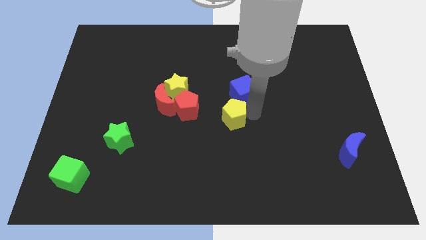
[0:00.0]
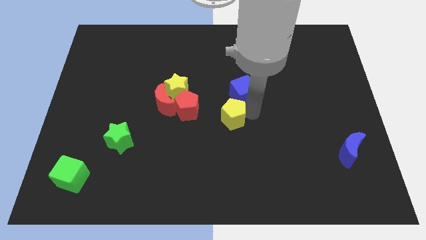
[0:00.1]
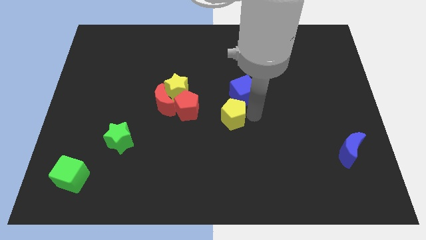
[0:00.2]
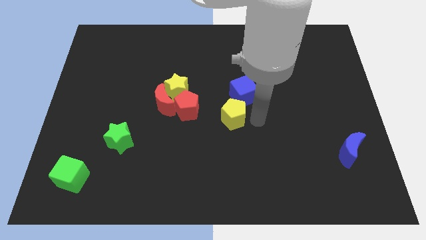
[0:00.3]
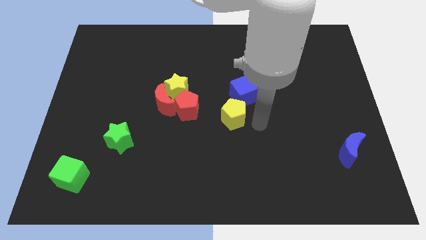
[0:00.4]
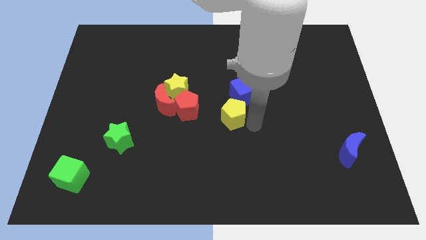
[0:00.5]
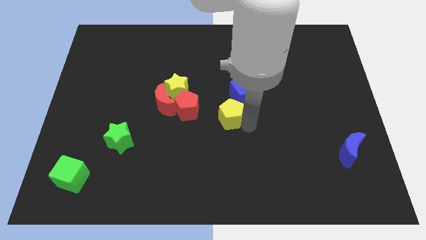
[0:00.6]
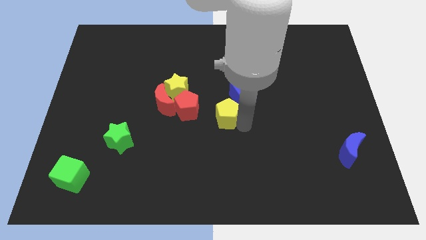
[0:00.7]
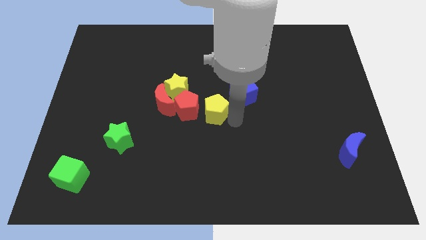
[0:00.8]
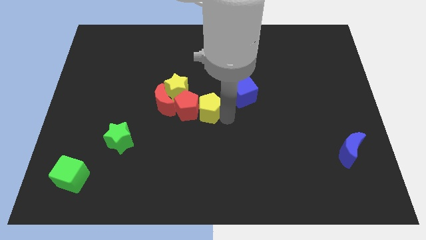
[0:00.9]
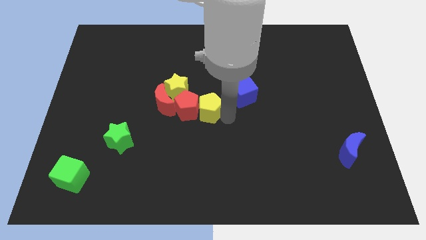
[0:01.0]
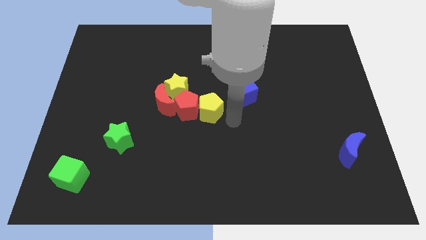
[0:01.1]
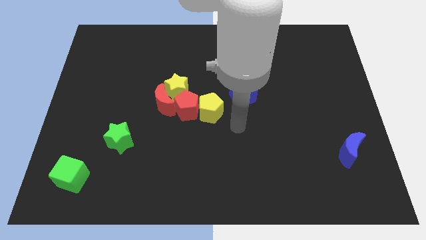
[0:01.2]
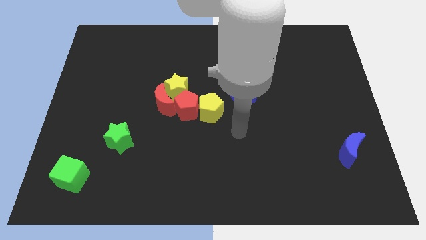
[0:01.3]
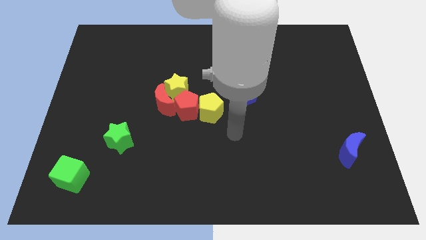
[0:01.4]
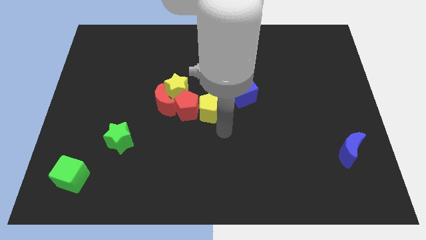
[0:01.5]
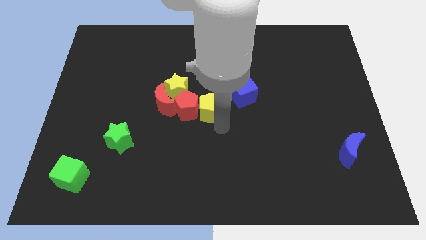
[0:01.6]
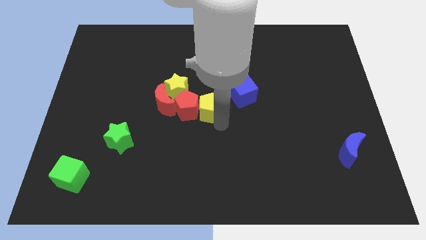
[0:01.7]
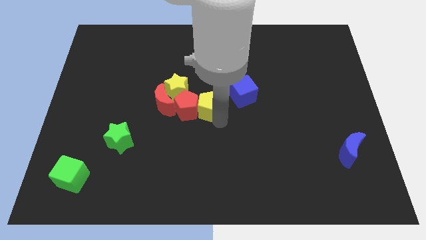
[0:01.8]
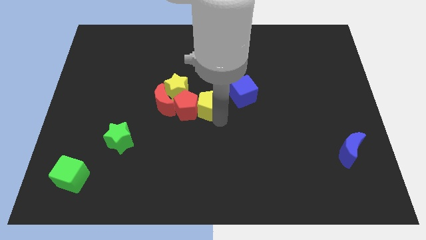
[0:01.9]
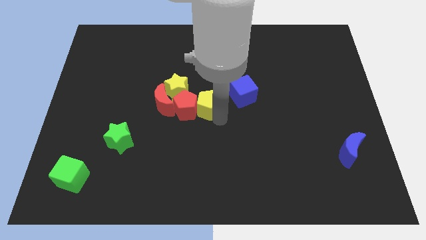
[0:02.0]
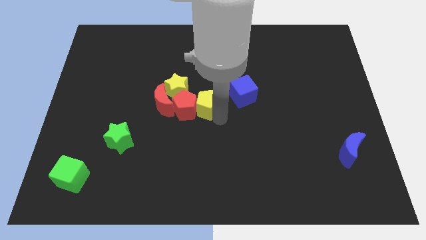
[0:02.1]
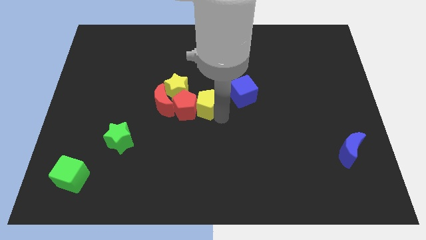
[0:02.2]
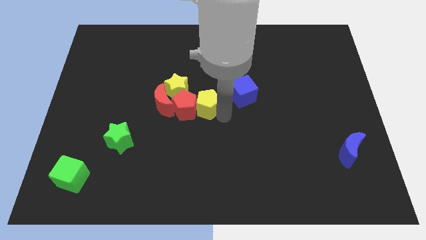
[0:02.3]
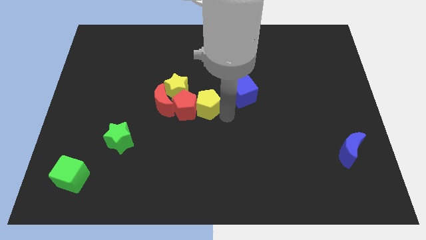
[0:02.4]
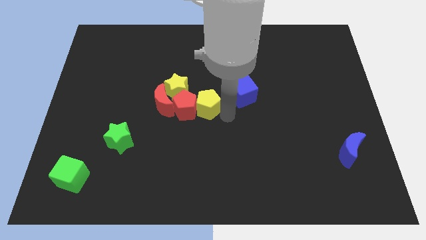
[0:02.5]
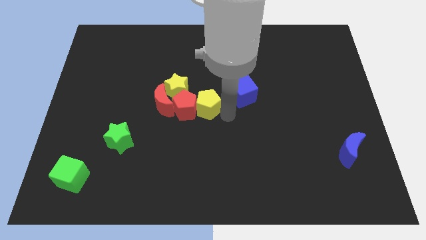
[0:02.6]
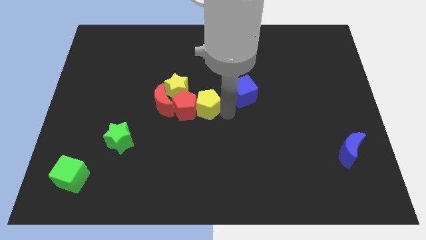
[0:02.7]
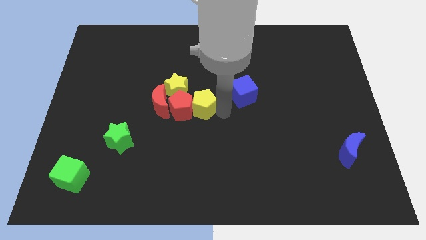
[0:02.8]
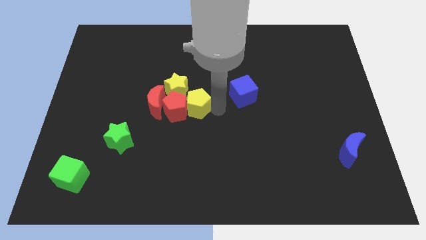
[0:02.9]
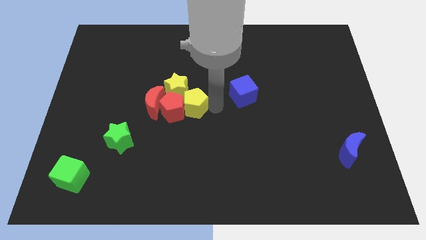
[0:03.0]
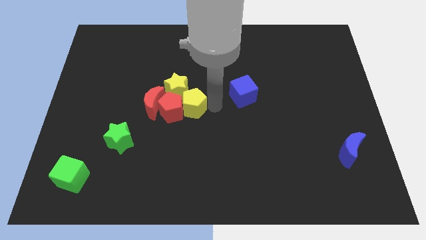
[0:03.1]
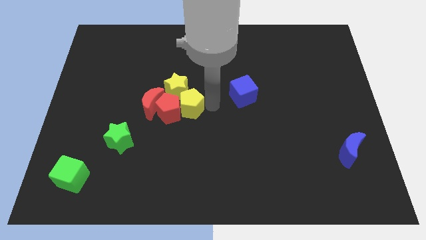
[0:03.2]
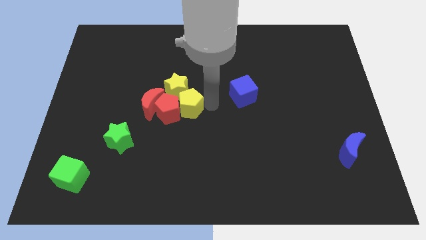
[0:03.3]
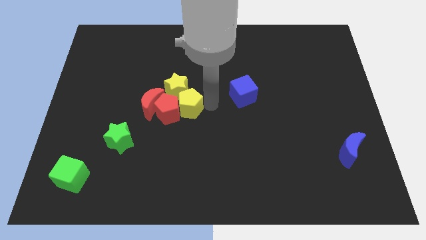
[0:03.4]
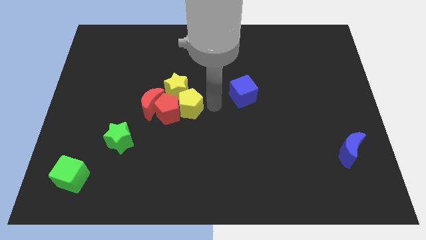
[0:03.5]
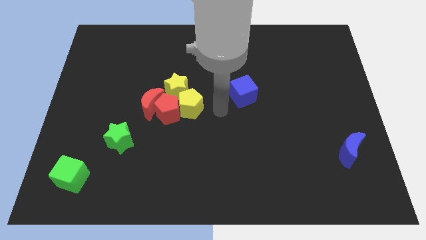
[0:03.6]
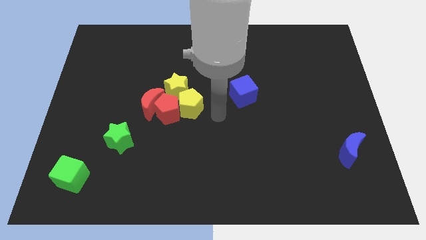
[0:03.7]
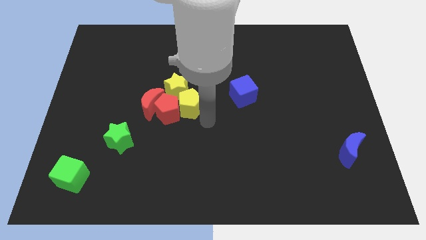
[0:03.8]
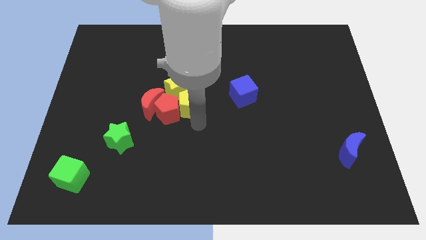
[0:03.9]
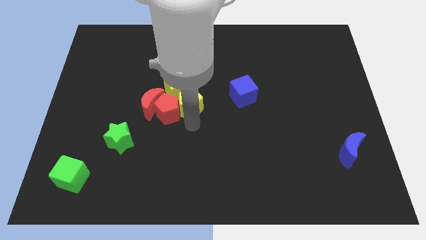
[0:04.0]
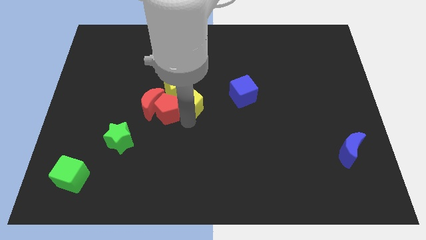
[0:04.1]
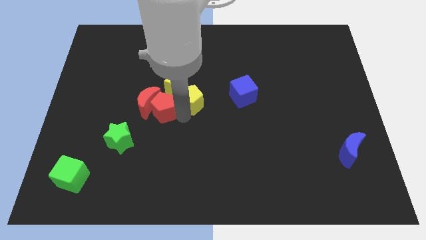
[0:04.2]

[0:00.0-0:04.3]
push the red crescent and red pentagon with the yellow star towards the left center of the board

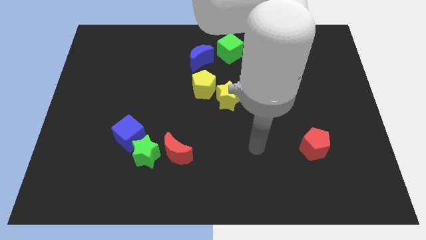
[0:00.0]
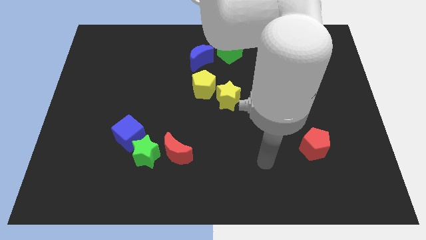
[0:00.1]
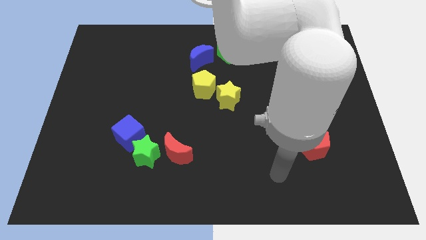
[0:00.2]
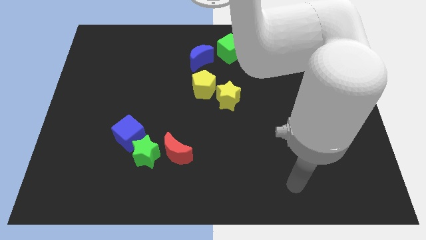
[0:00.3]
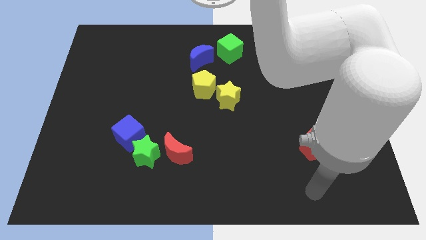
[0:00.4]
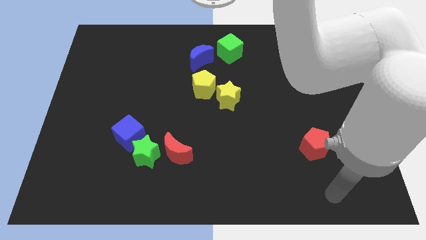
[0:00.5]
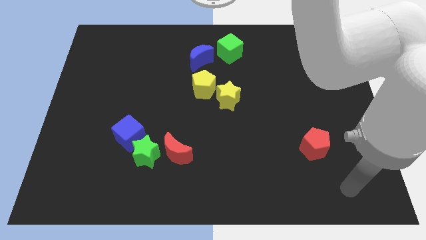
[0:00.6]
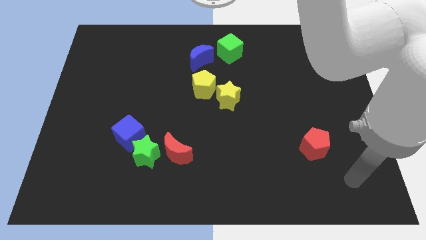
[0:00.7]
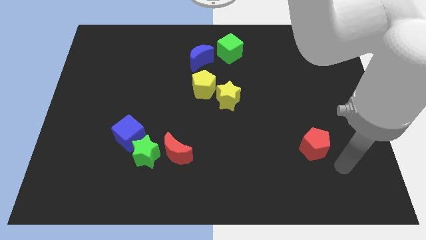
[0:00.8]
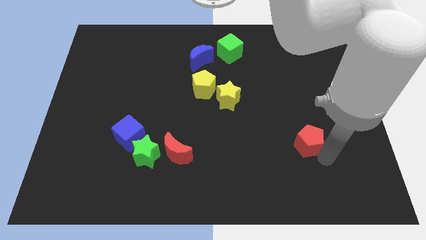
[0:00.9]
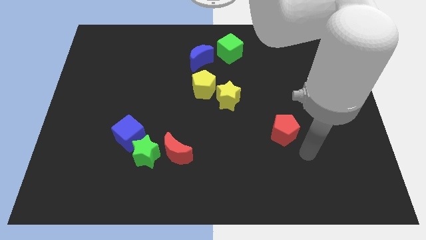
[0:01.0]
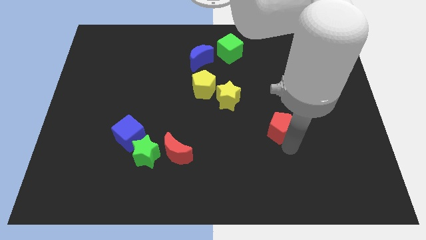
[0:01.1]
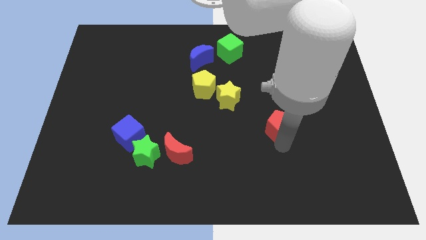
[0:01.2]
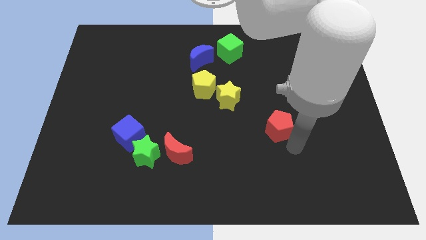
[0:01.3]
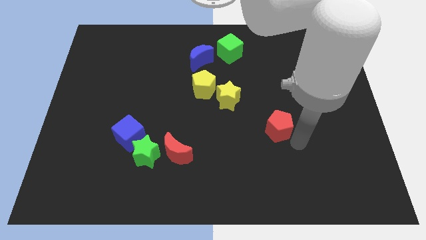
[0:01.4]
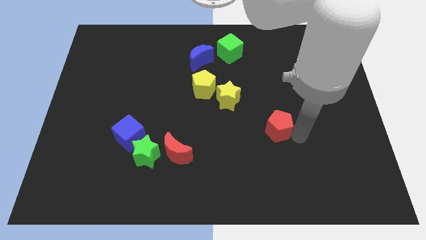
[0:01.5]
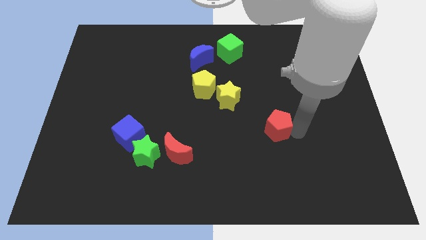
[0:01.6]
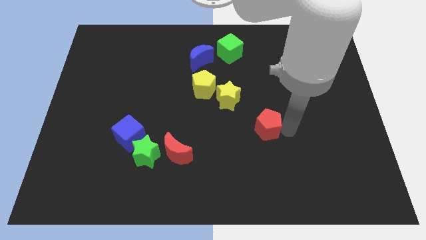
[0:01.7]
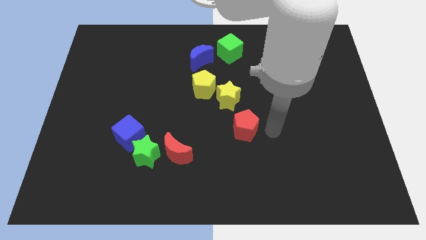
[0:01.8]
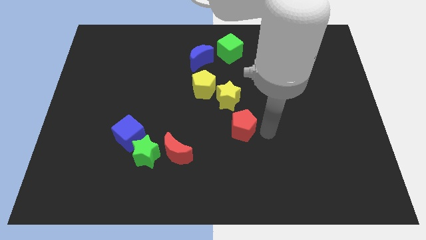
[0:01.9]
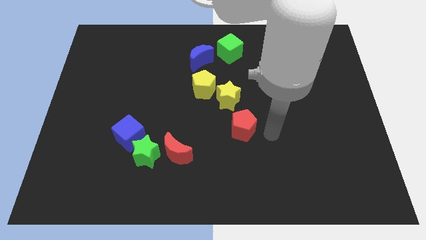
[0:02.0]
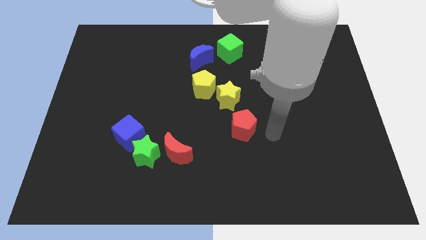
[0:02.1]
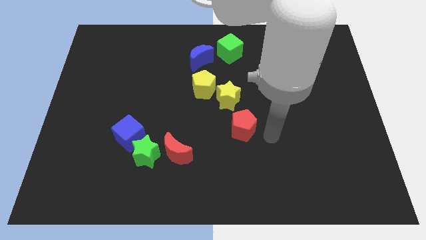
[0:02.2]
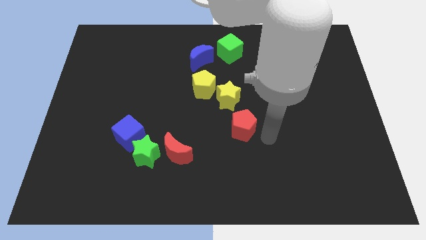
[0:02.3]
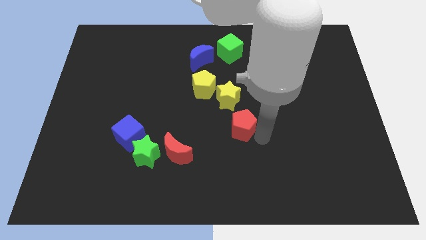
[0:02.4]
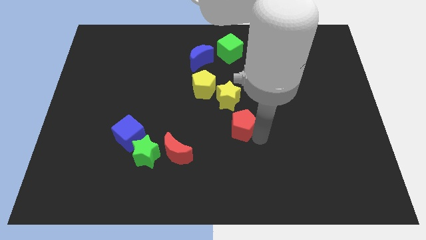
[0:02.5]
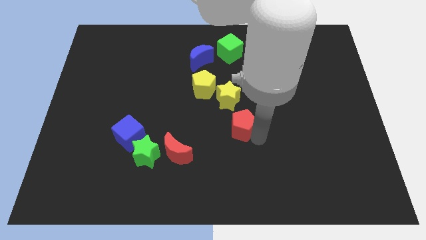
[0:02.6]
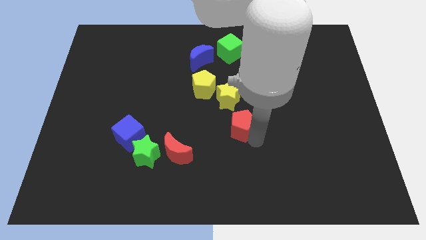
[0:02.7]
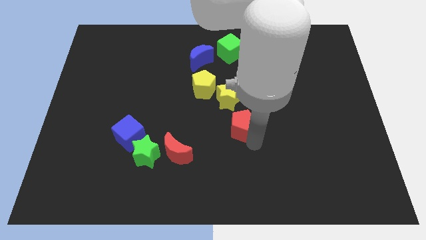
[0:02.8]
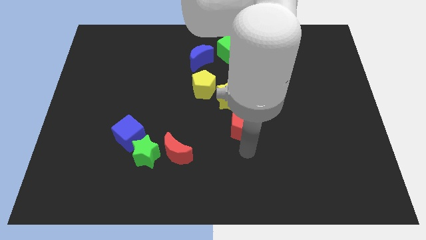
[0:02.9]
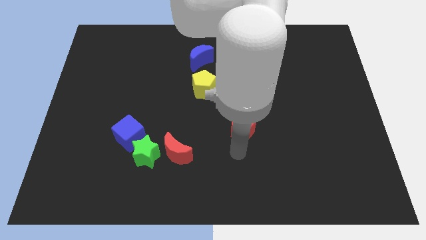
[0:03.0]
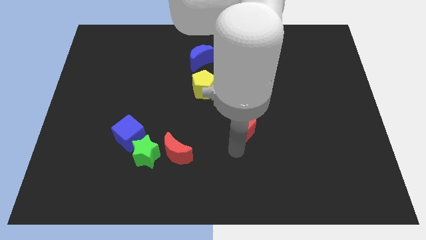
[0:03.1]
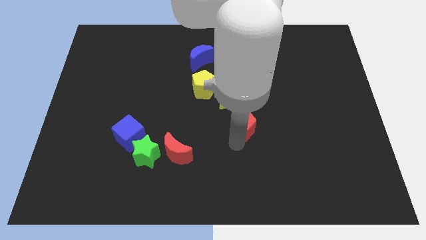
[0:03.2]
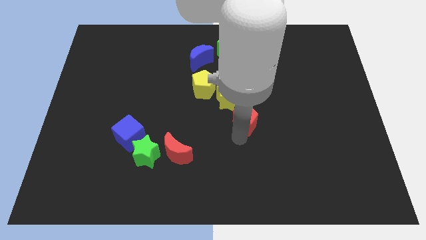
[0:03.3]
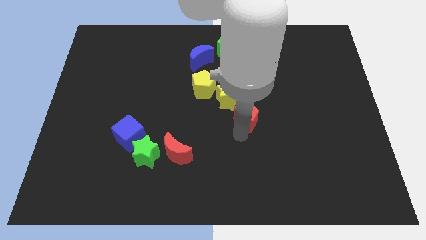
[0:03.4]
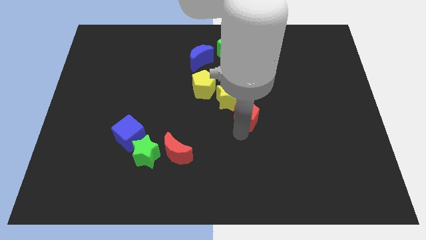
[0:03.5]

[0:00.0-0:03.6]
push the red pentagon diagonally right to yellow star

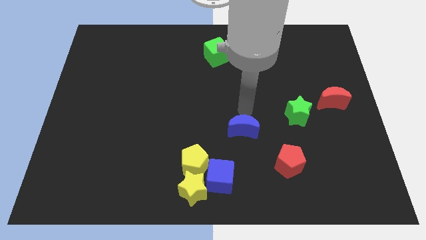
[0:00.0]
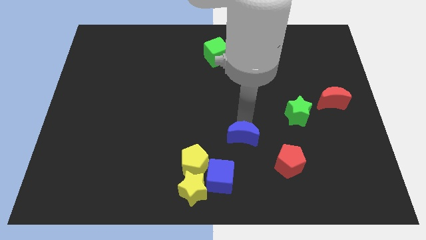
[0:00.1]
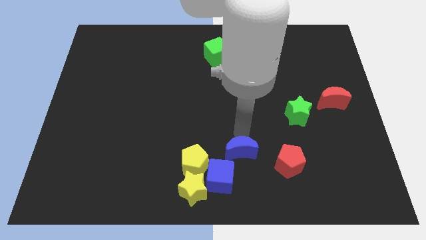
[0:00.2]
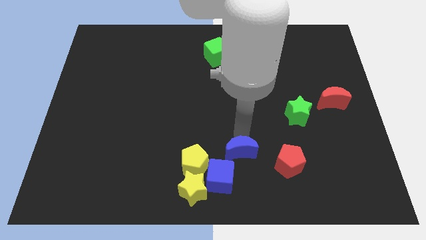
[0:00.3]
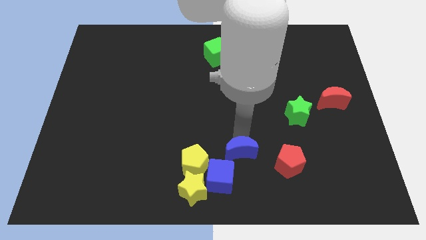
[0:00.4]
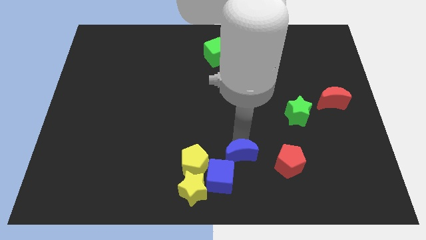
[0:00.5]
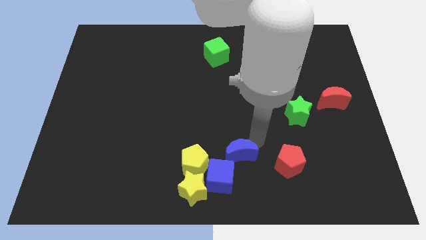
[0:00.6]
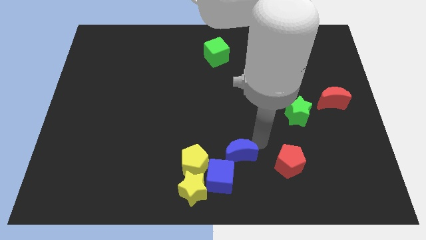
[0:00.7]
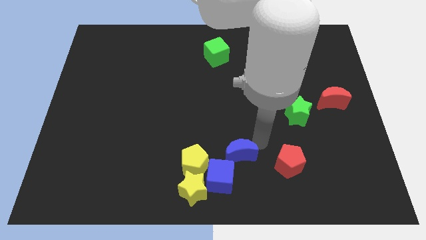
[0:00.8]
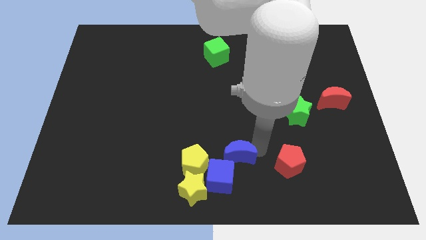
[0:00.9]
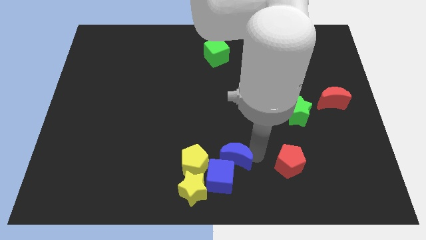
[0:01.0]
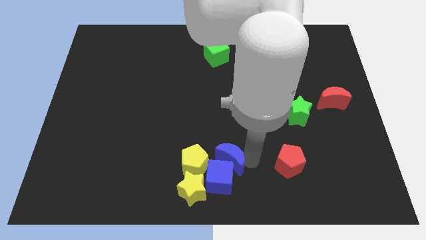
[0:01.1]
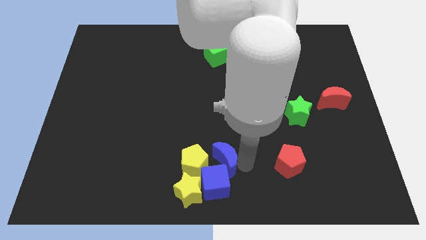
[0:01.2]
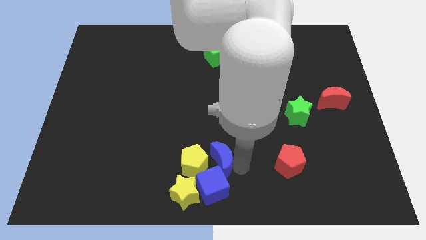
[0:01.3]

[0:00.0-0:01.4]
place the blue crescent above the blue cube
